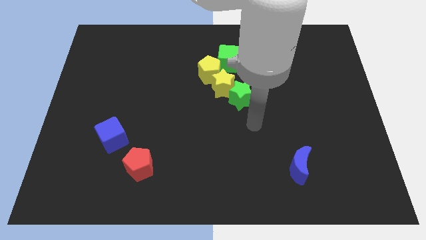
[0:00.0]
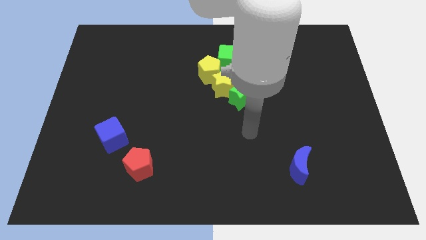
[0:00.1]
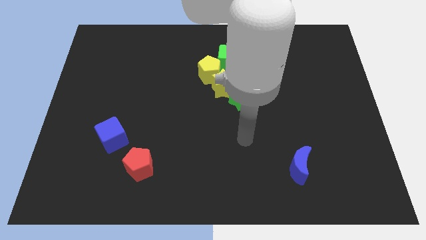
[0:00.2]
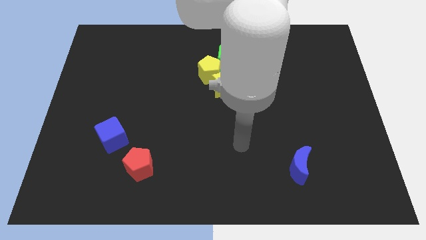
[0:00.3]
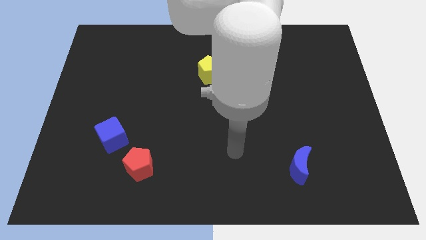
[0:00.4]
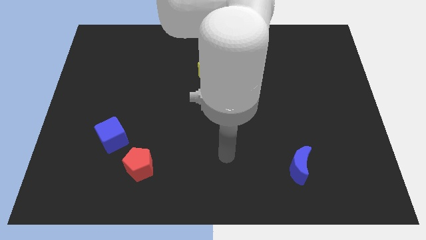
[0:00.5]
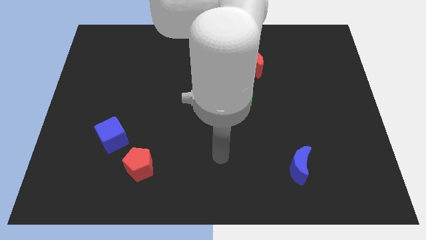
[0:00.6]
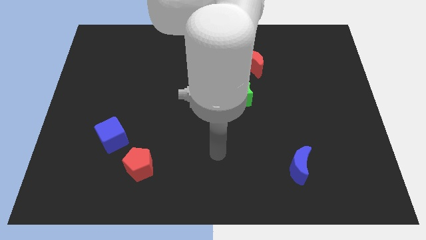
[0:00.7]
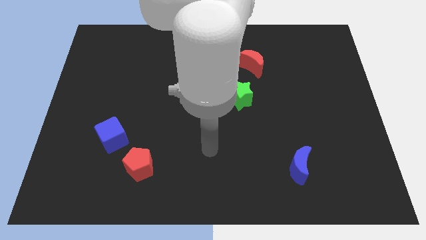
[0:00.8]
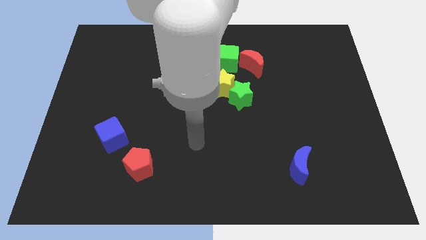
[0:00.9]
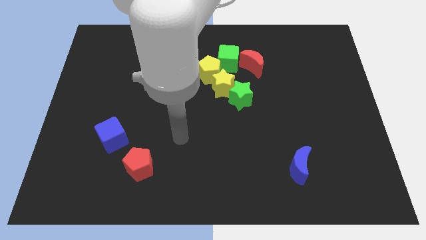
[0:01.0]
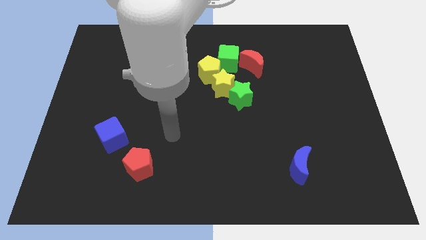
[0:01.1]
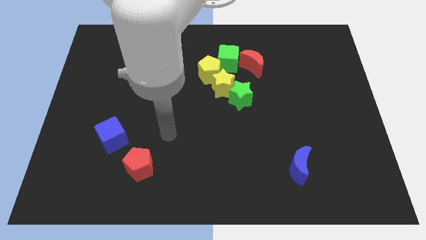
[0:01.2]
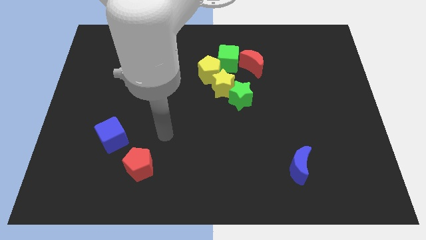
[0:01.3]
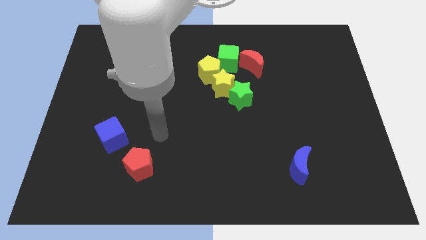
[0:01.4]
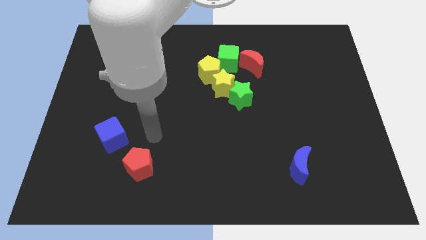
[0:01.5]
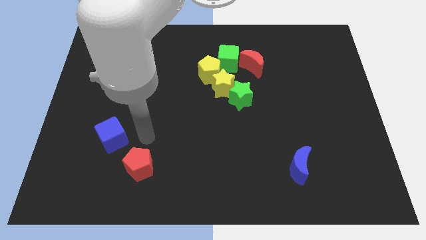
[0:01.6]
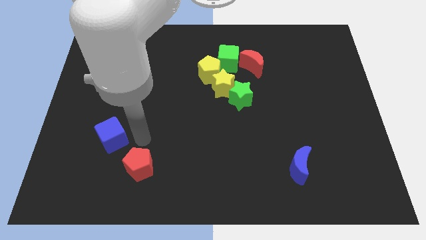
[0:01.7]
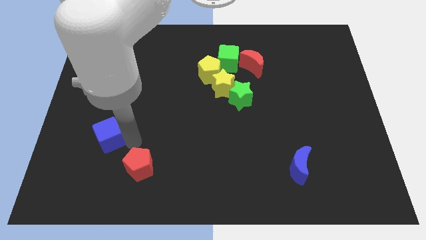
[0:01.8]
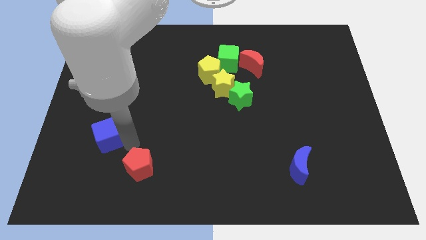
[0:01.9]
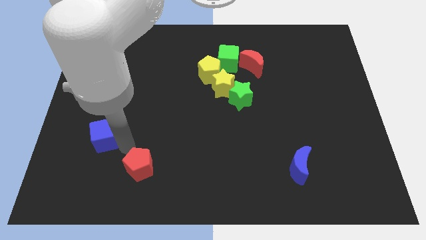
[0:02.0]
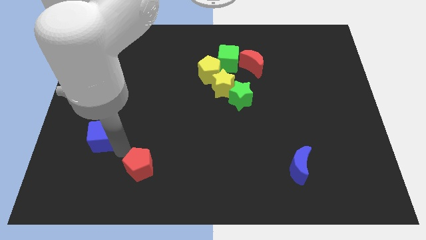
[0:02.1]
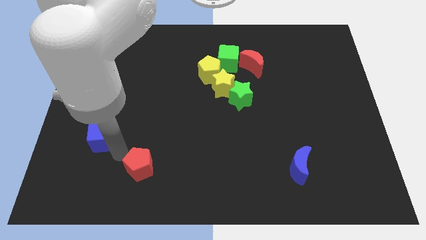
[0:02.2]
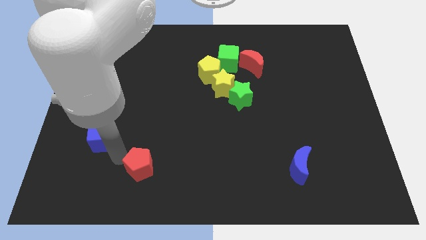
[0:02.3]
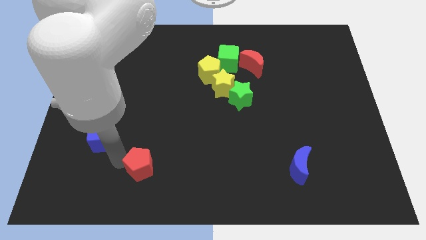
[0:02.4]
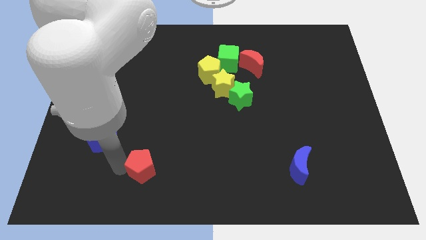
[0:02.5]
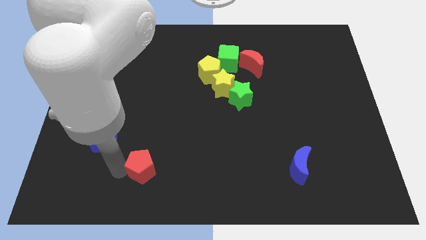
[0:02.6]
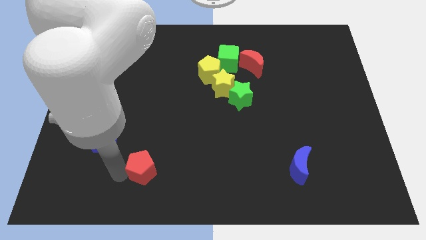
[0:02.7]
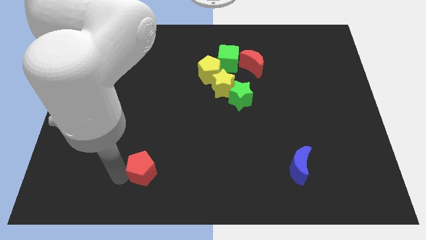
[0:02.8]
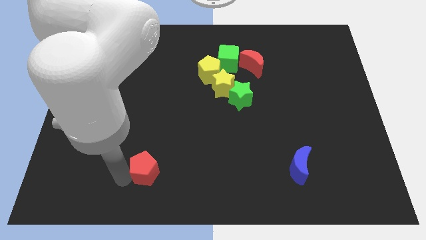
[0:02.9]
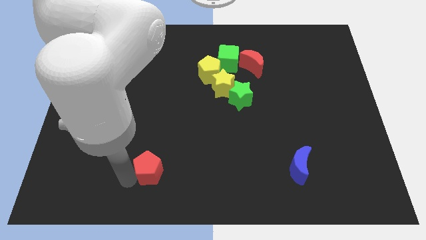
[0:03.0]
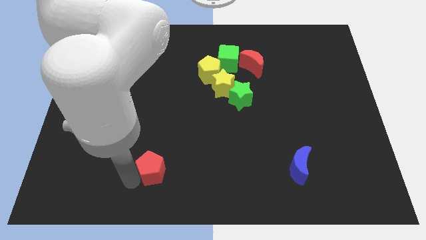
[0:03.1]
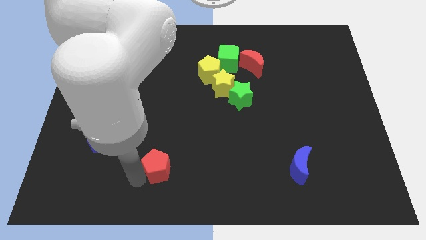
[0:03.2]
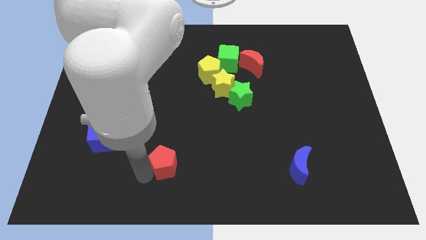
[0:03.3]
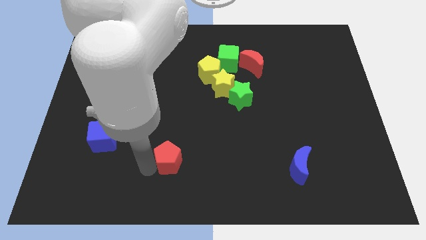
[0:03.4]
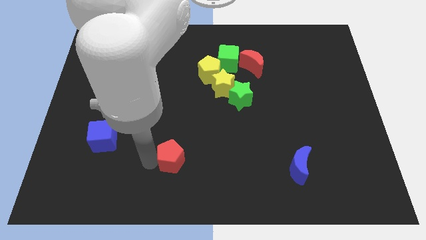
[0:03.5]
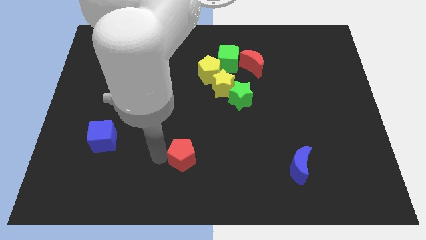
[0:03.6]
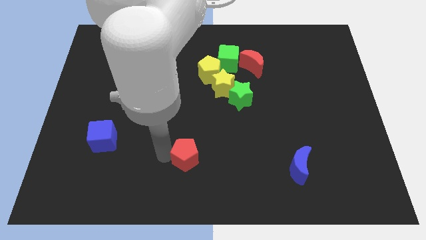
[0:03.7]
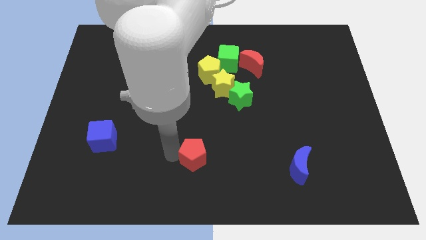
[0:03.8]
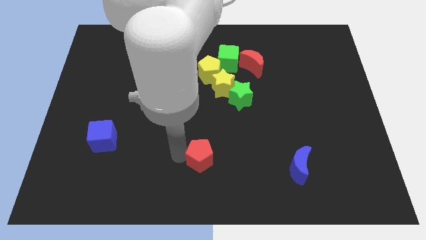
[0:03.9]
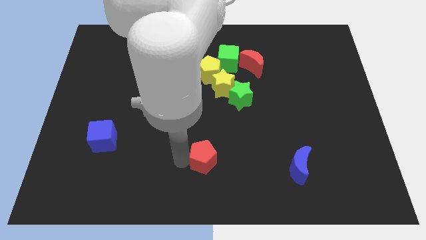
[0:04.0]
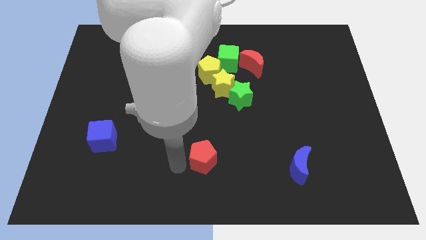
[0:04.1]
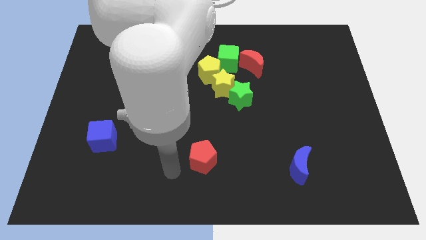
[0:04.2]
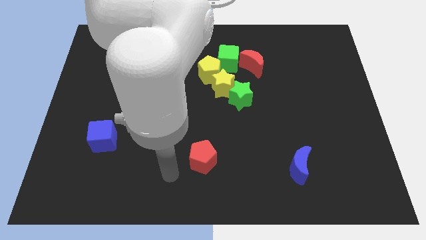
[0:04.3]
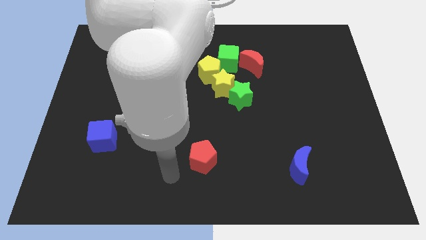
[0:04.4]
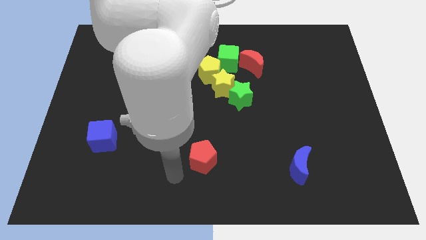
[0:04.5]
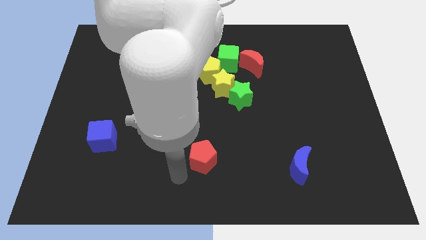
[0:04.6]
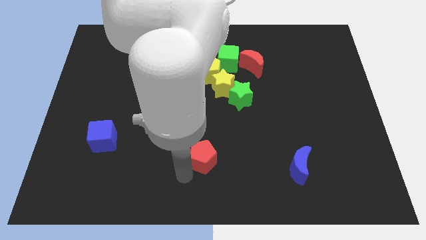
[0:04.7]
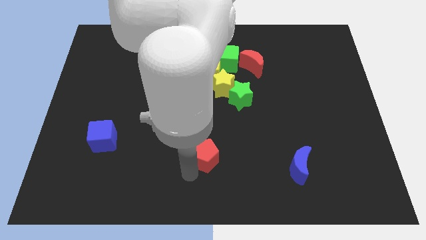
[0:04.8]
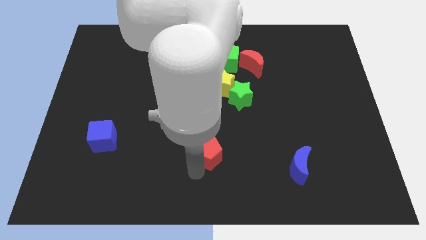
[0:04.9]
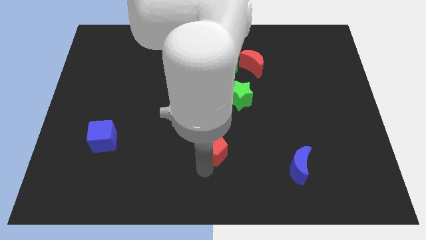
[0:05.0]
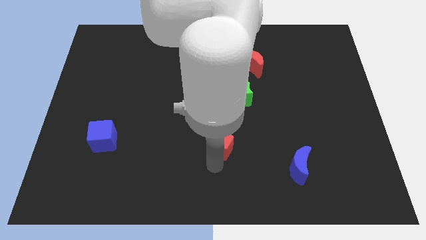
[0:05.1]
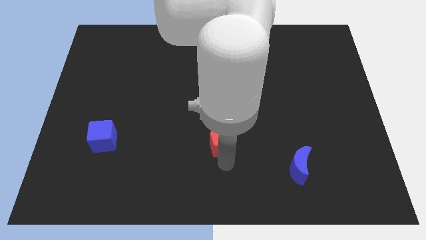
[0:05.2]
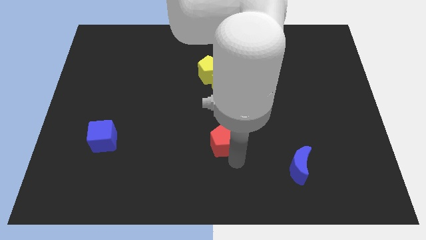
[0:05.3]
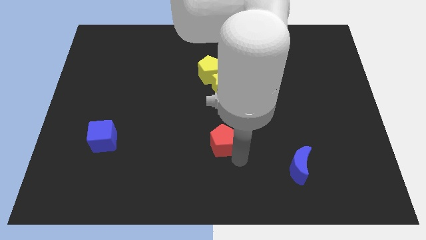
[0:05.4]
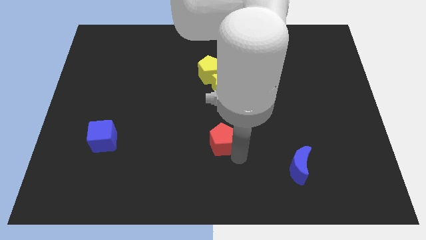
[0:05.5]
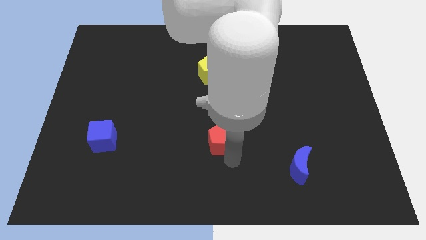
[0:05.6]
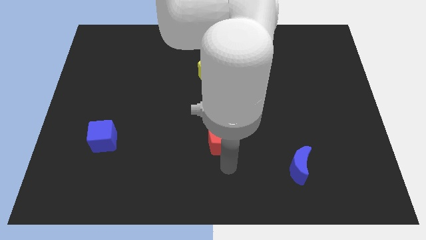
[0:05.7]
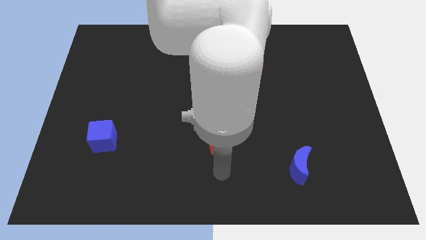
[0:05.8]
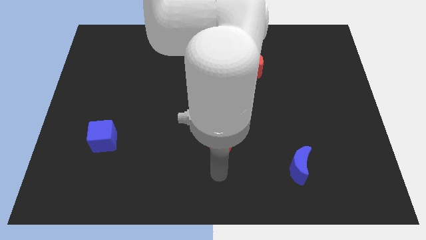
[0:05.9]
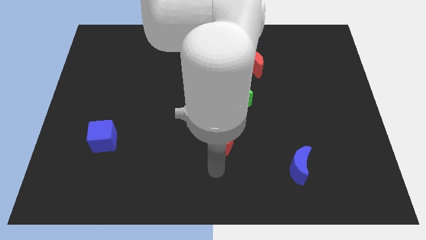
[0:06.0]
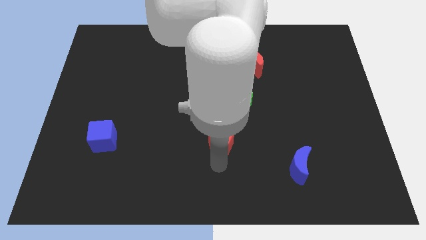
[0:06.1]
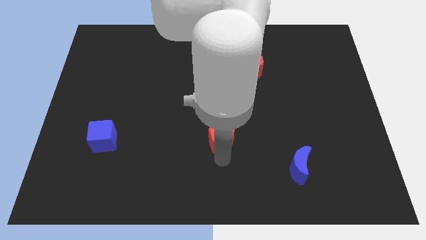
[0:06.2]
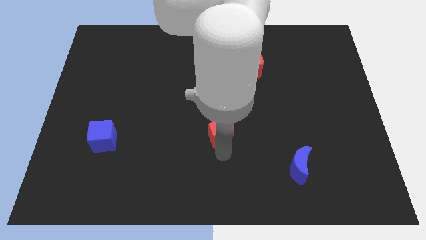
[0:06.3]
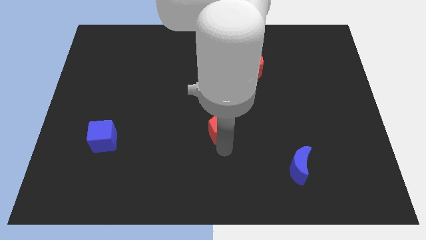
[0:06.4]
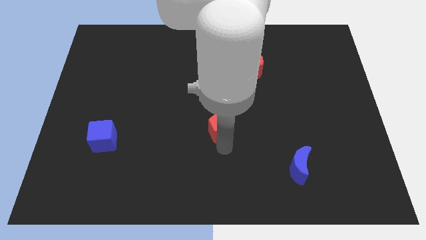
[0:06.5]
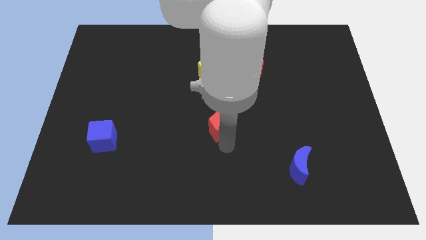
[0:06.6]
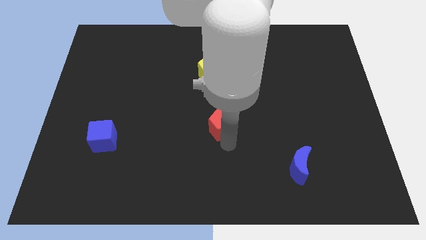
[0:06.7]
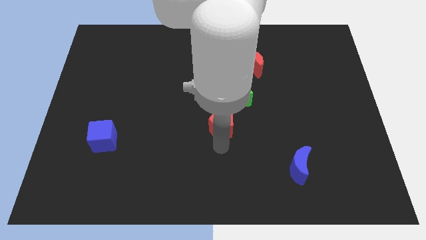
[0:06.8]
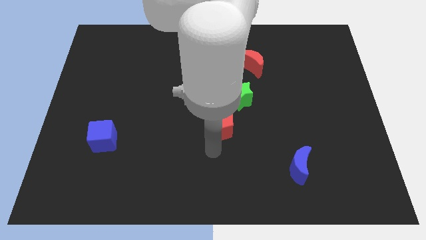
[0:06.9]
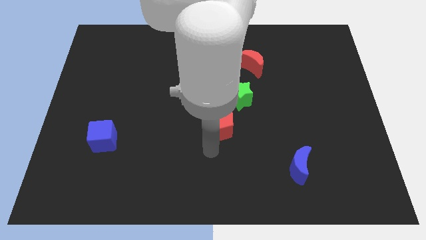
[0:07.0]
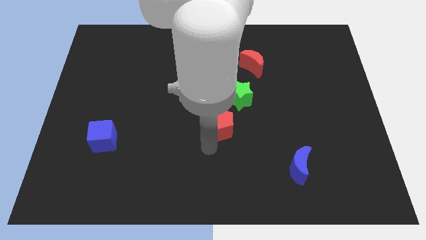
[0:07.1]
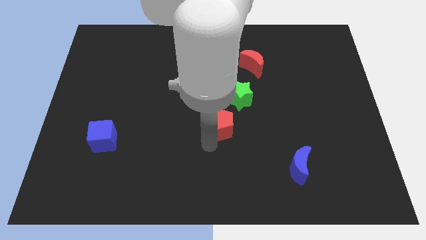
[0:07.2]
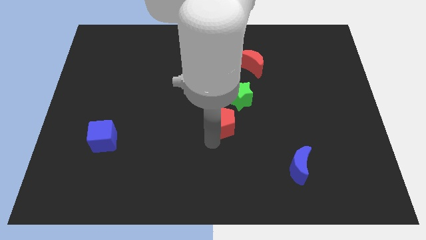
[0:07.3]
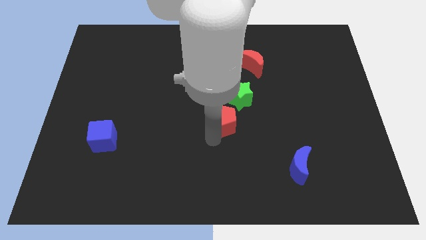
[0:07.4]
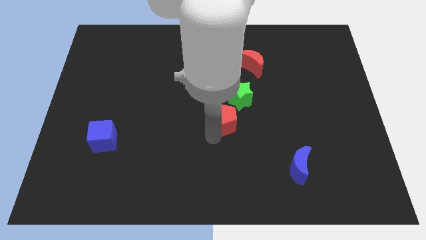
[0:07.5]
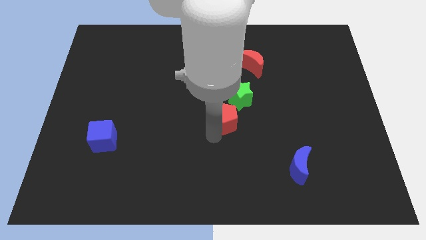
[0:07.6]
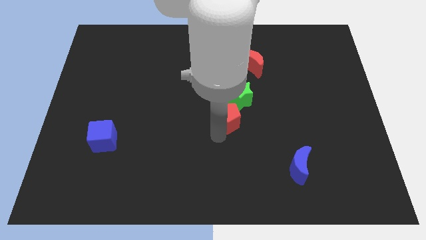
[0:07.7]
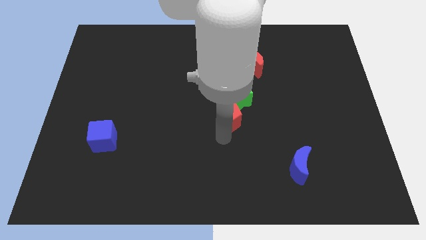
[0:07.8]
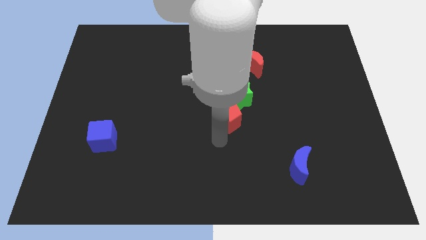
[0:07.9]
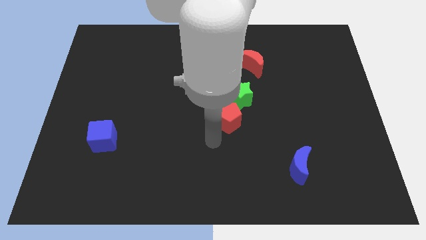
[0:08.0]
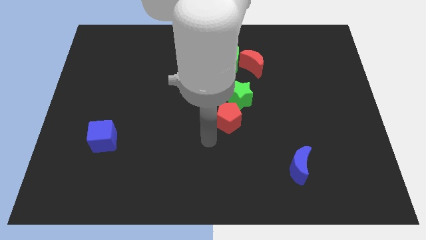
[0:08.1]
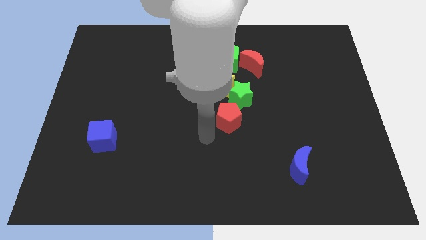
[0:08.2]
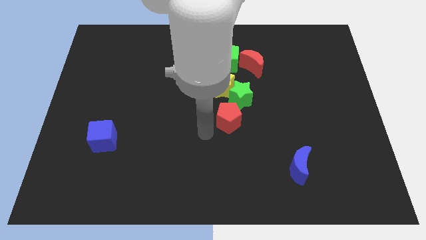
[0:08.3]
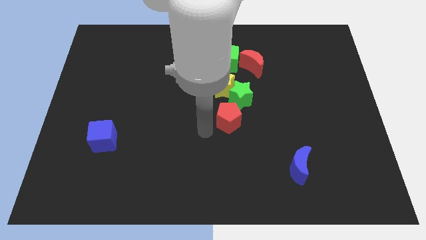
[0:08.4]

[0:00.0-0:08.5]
take the red pentagon close to the bottom side of the green star

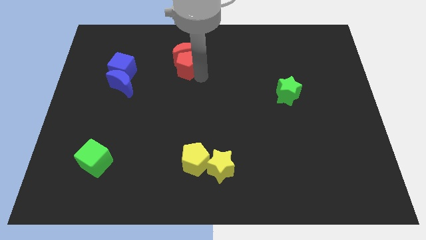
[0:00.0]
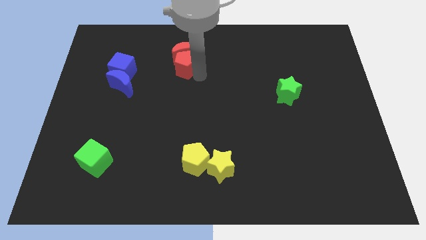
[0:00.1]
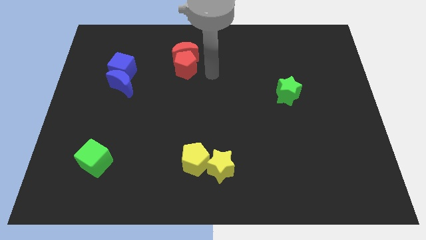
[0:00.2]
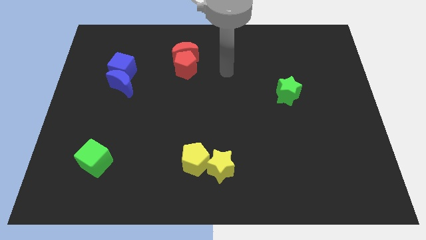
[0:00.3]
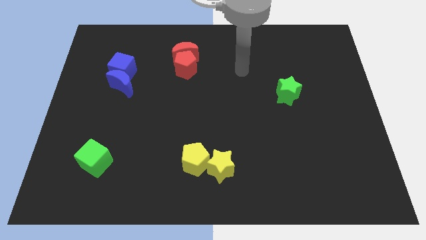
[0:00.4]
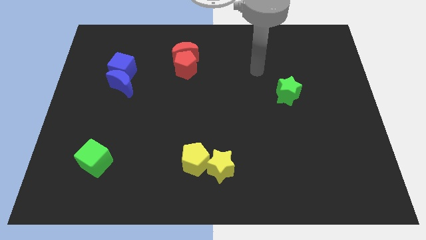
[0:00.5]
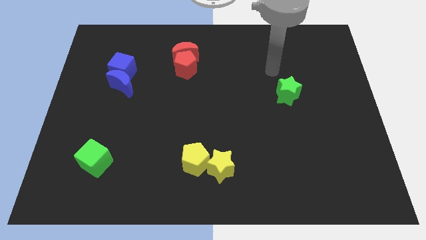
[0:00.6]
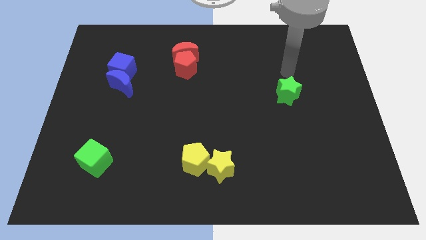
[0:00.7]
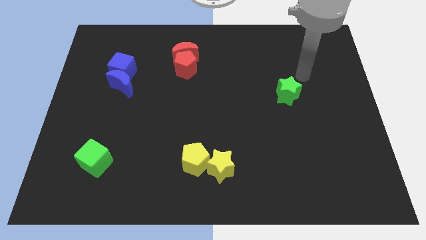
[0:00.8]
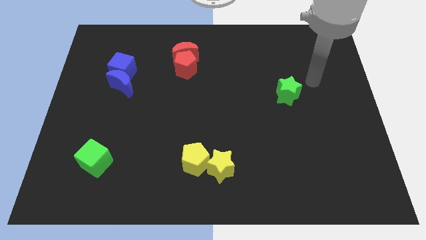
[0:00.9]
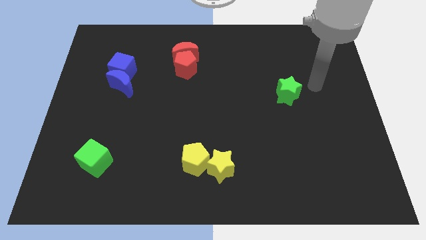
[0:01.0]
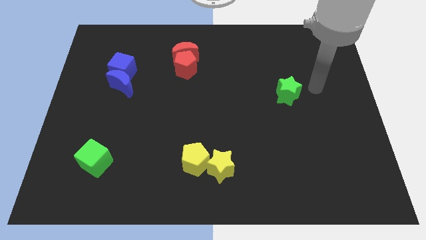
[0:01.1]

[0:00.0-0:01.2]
place your arm to the right side of green star
